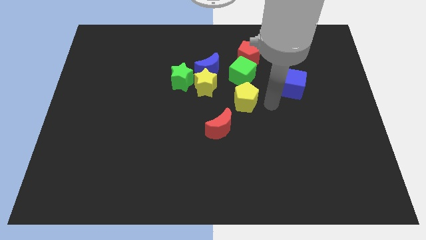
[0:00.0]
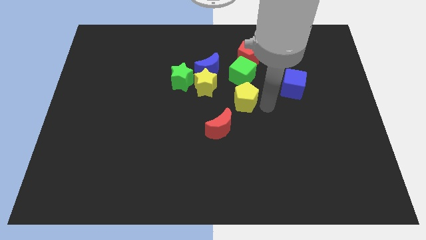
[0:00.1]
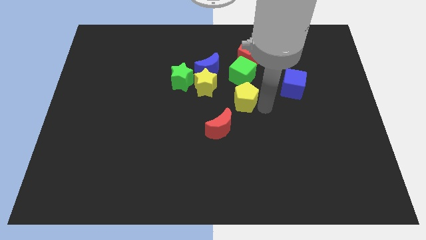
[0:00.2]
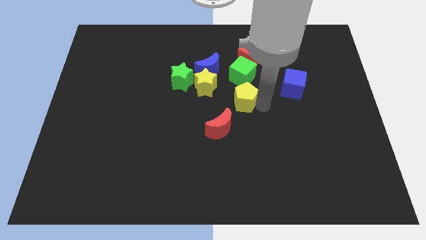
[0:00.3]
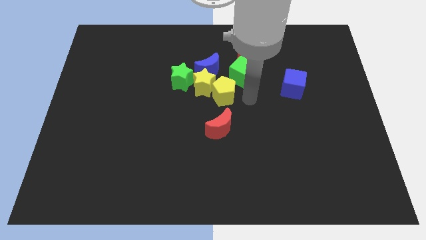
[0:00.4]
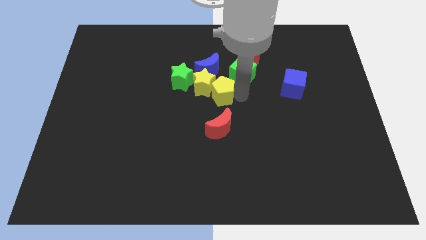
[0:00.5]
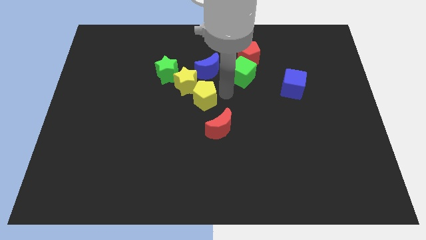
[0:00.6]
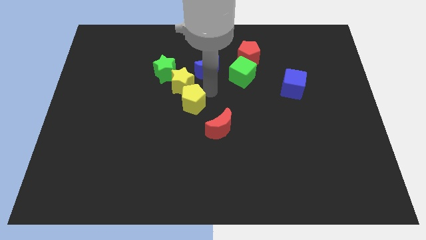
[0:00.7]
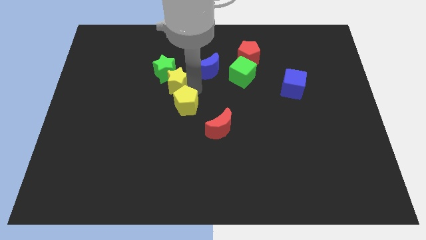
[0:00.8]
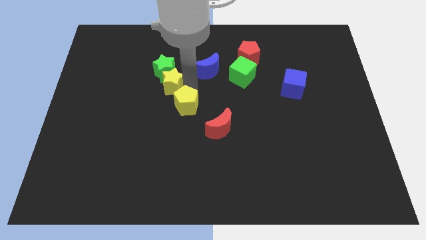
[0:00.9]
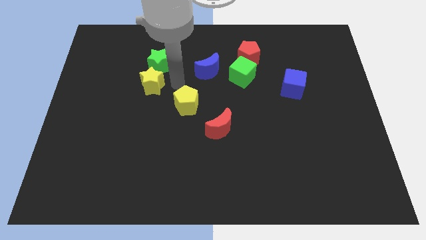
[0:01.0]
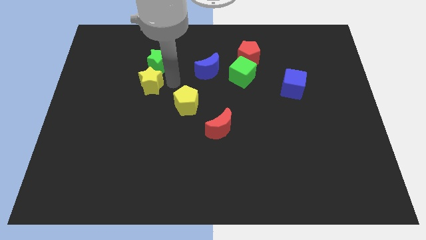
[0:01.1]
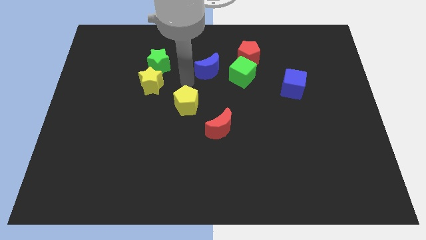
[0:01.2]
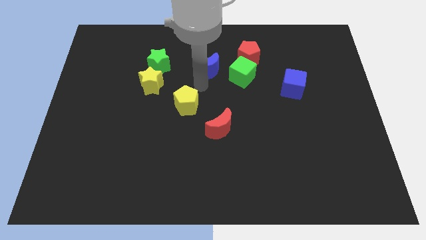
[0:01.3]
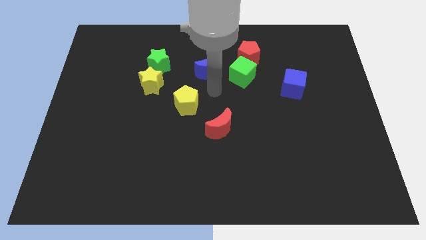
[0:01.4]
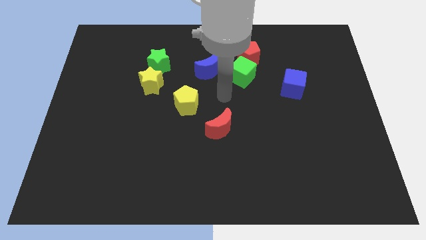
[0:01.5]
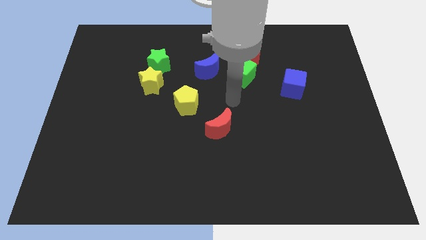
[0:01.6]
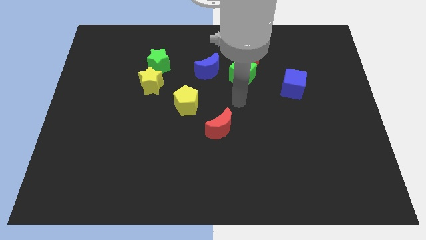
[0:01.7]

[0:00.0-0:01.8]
place your arm to the bottom of green cube

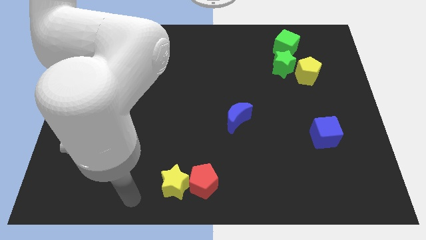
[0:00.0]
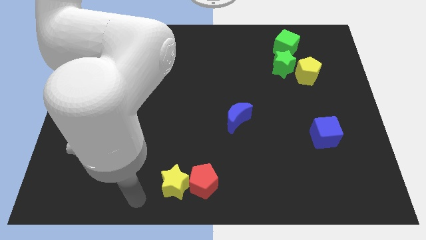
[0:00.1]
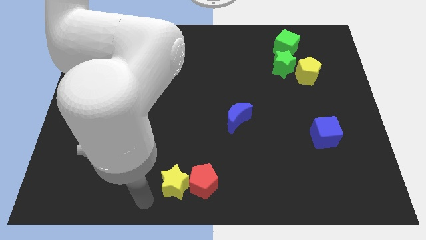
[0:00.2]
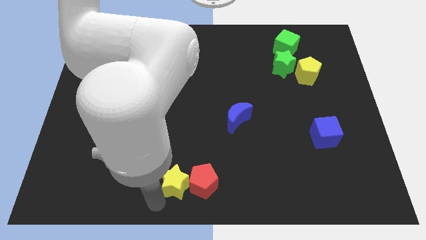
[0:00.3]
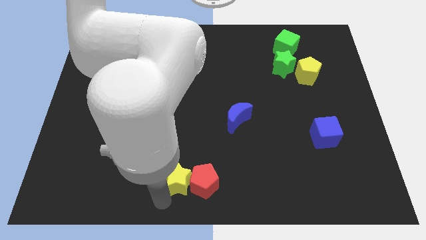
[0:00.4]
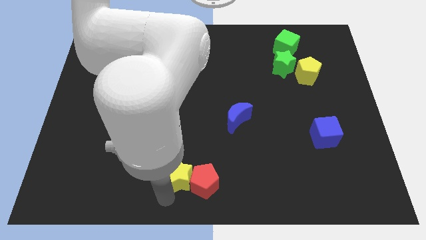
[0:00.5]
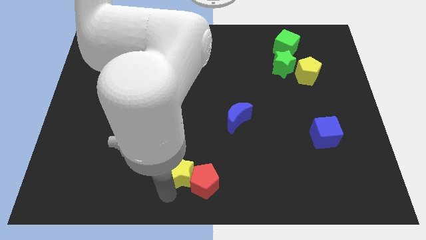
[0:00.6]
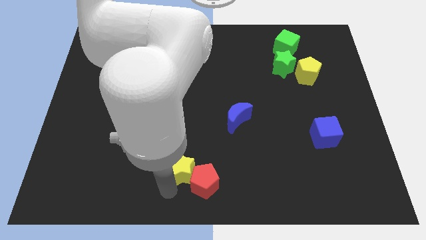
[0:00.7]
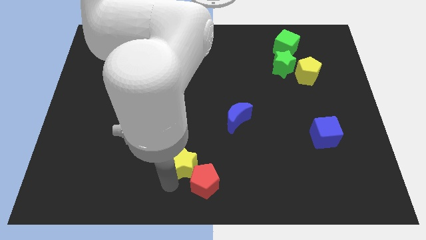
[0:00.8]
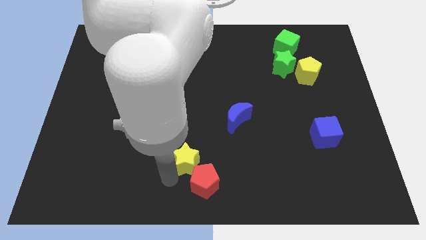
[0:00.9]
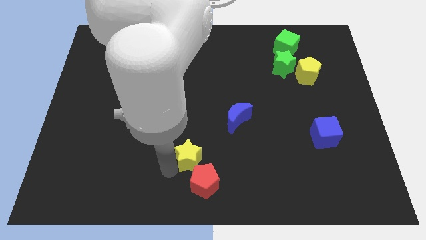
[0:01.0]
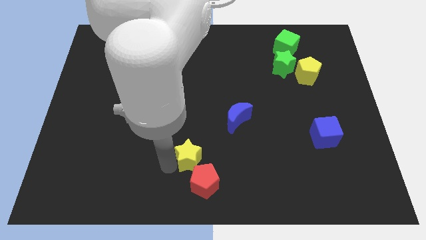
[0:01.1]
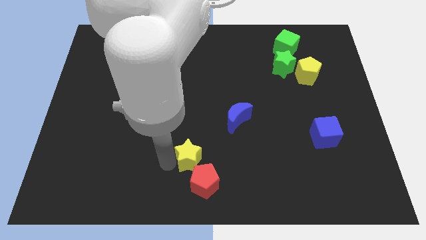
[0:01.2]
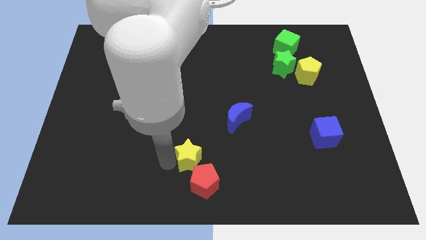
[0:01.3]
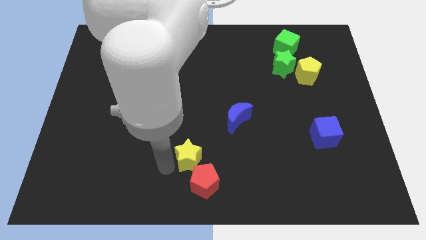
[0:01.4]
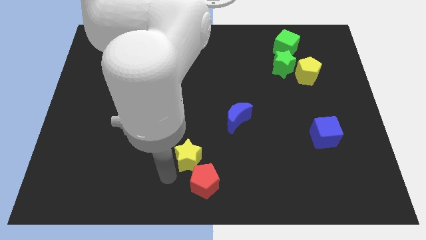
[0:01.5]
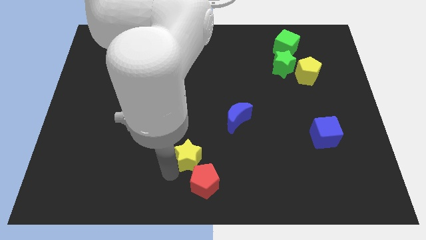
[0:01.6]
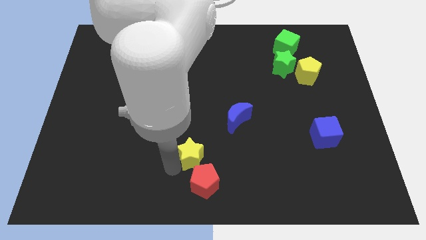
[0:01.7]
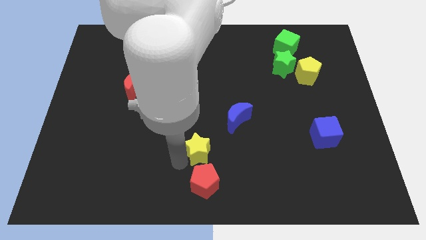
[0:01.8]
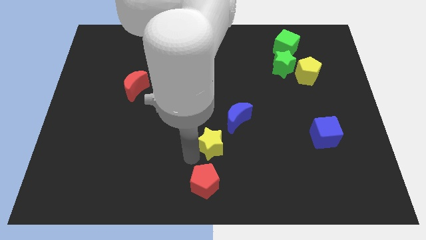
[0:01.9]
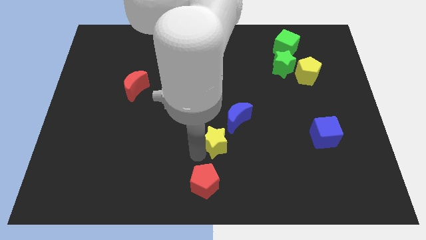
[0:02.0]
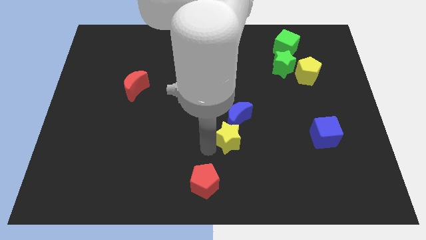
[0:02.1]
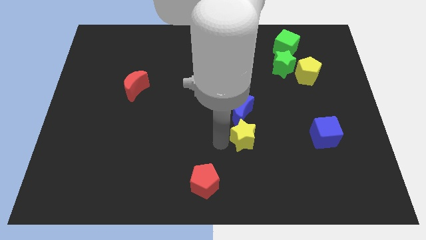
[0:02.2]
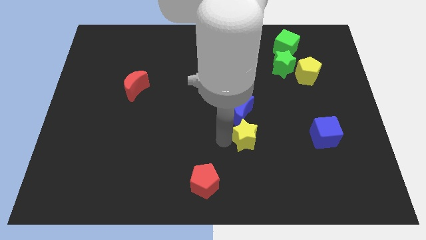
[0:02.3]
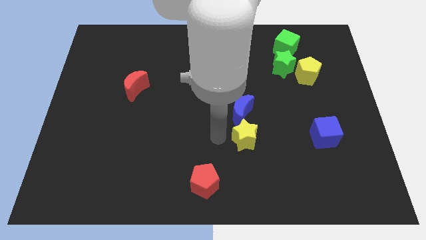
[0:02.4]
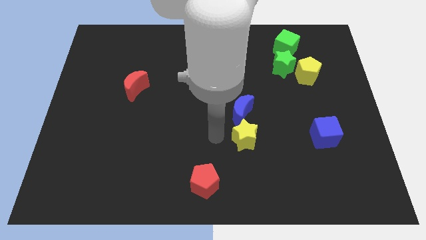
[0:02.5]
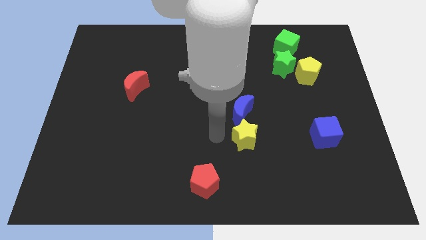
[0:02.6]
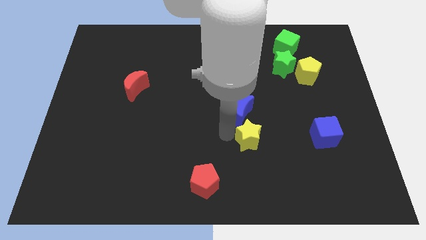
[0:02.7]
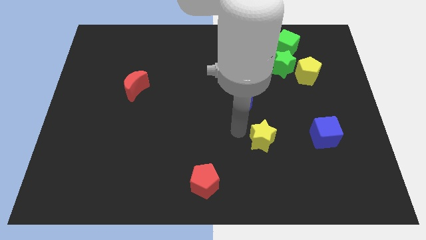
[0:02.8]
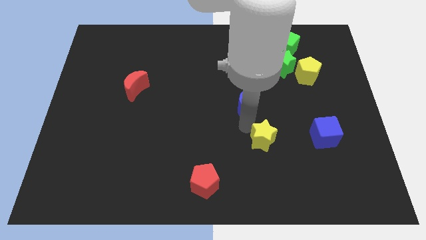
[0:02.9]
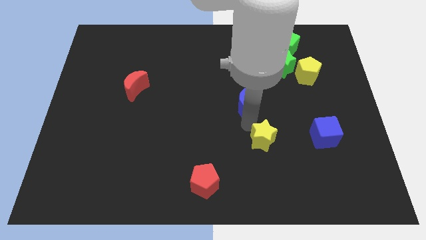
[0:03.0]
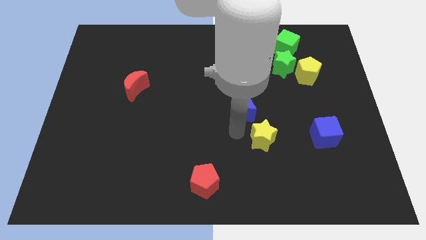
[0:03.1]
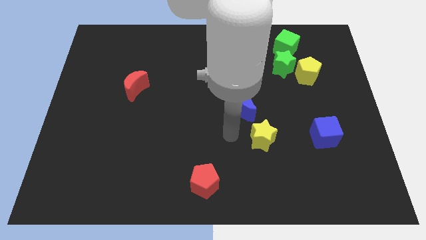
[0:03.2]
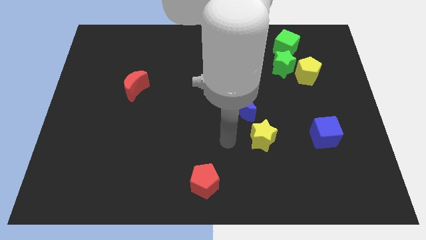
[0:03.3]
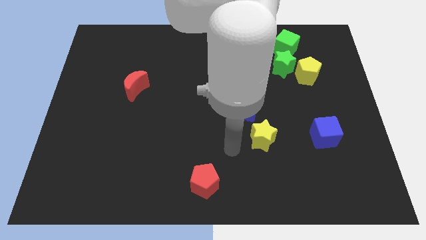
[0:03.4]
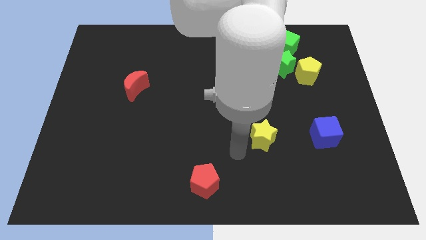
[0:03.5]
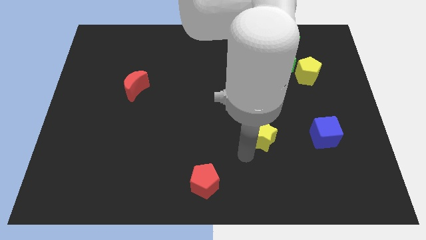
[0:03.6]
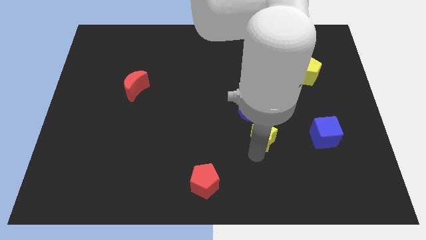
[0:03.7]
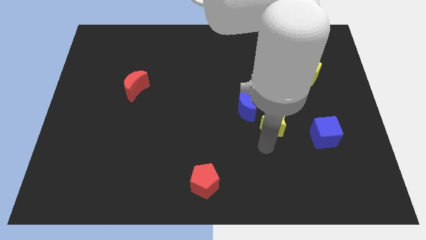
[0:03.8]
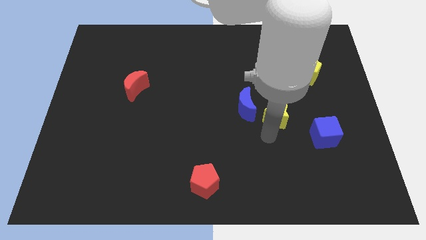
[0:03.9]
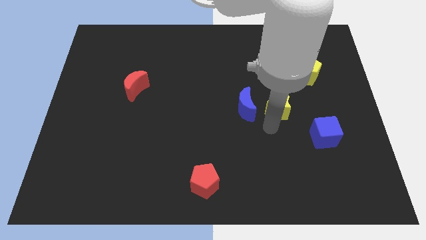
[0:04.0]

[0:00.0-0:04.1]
push the yellow star to the right of the blue crescent

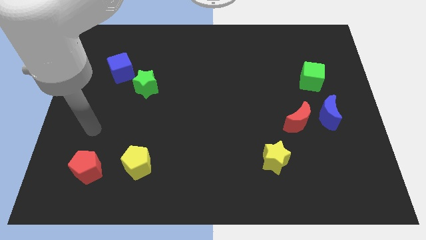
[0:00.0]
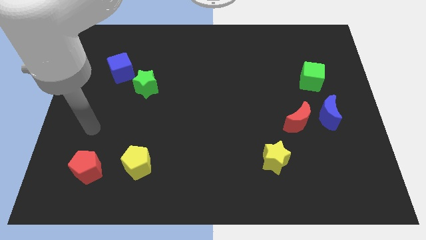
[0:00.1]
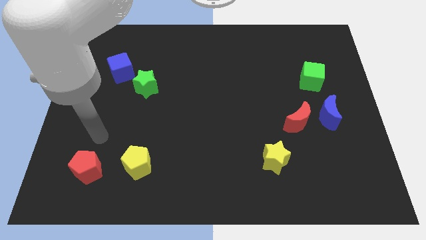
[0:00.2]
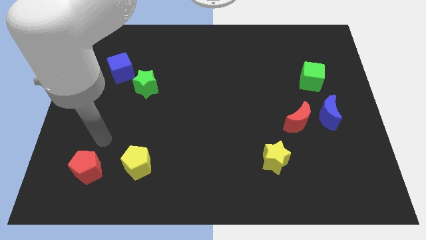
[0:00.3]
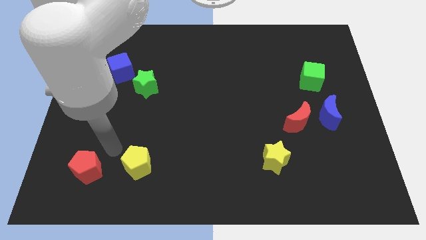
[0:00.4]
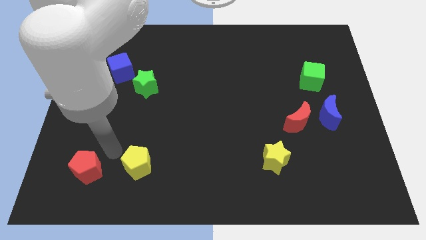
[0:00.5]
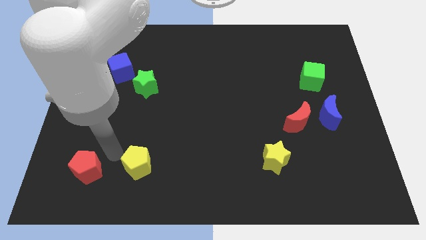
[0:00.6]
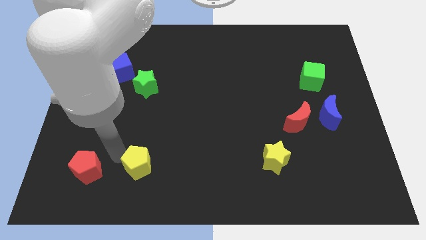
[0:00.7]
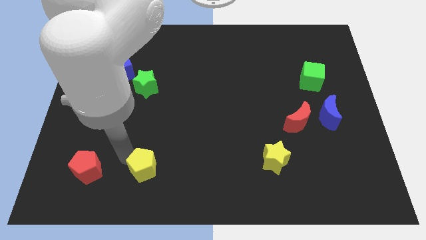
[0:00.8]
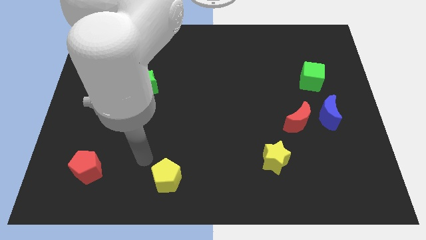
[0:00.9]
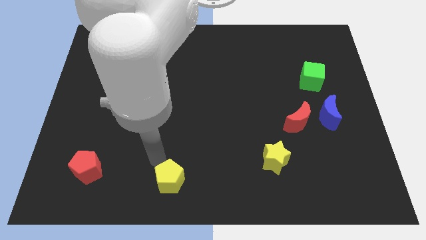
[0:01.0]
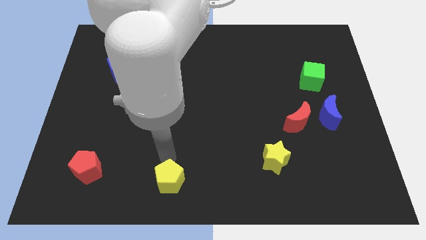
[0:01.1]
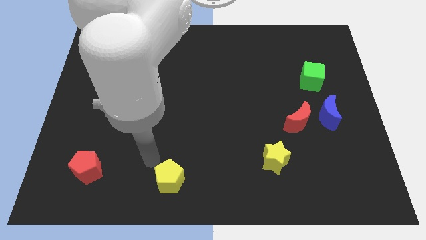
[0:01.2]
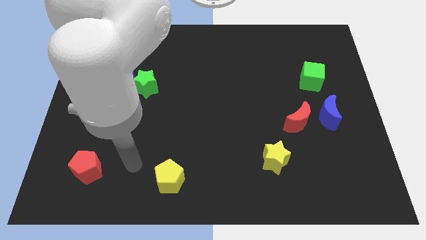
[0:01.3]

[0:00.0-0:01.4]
move the yellow pentagon far from the red pentagon

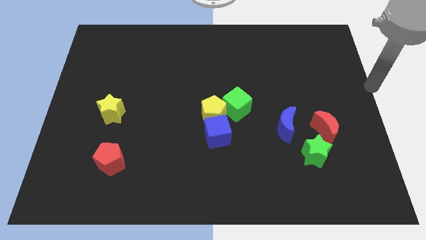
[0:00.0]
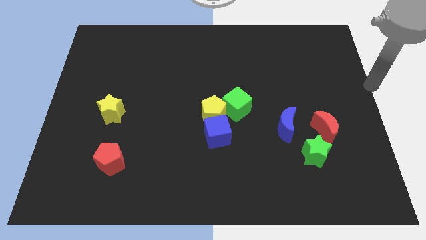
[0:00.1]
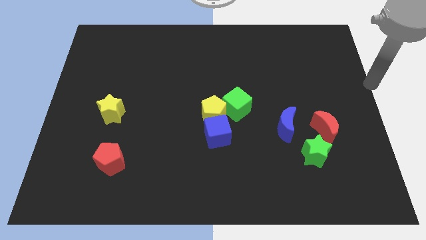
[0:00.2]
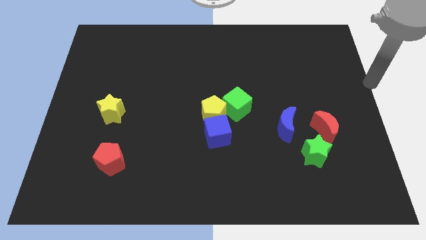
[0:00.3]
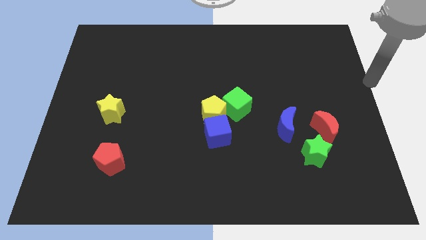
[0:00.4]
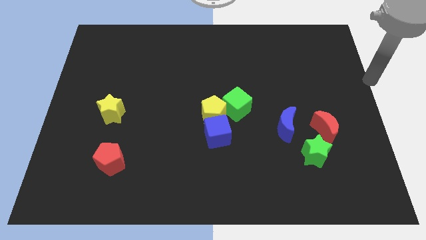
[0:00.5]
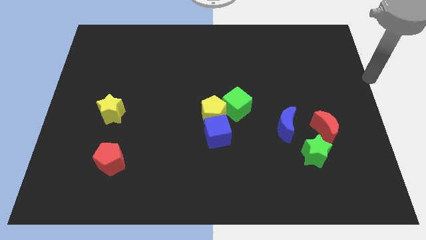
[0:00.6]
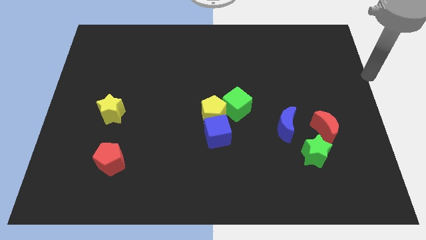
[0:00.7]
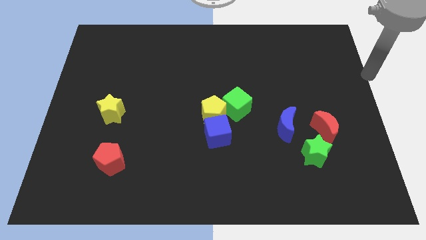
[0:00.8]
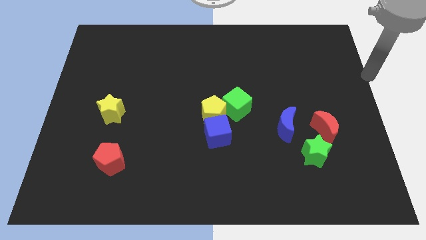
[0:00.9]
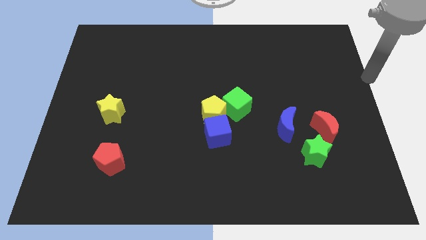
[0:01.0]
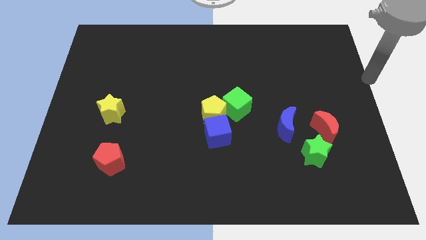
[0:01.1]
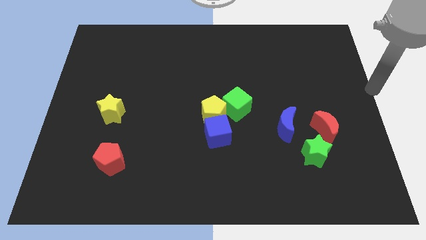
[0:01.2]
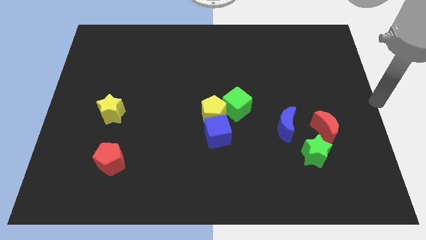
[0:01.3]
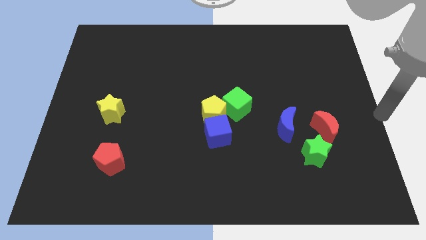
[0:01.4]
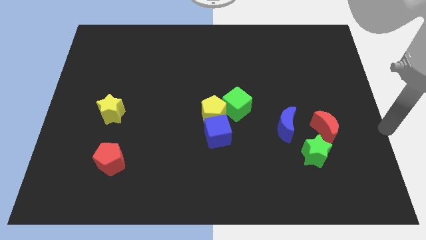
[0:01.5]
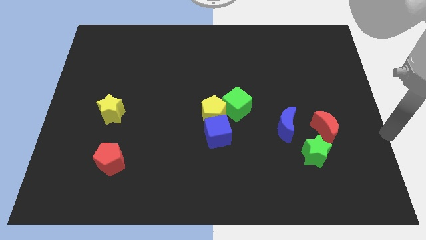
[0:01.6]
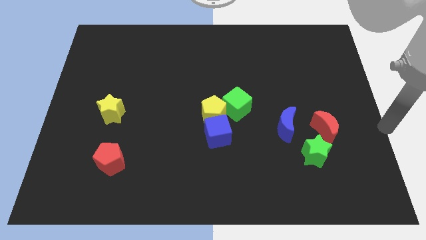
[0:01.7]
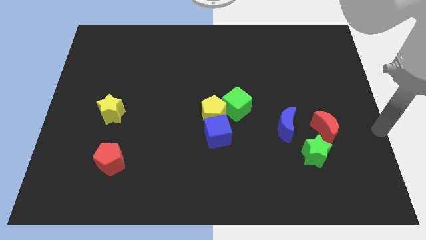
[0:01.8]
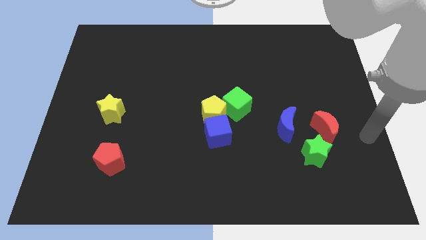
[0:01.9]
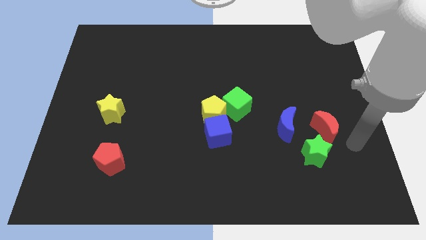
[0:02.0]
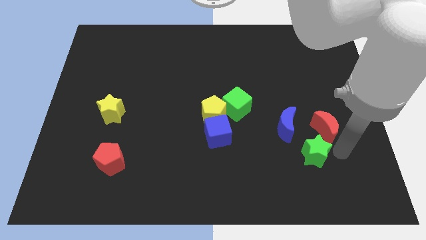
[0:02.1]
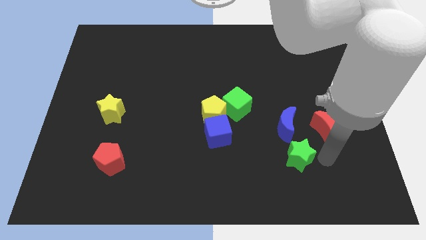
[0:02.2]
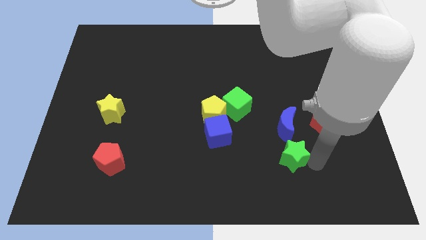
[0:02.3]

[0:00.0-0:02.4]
move your arm to the right side of the board
